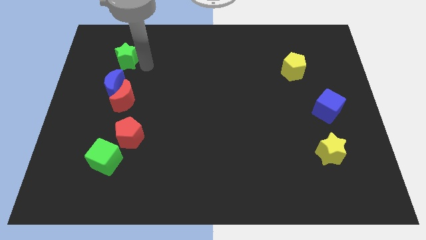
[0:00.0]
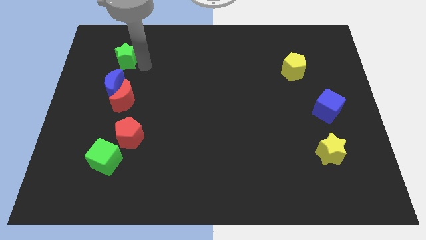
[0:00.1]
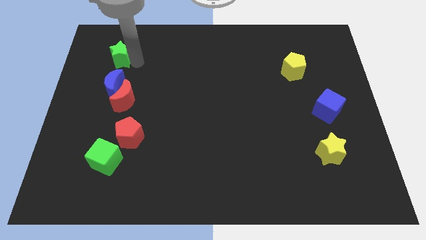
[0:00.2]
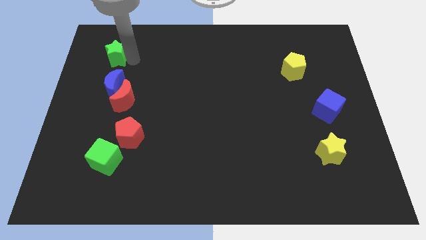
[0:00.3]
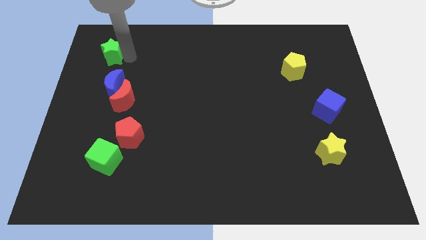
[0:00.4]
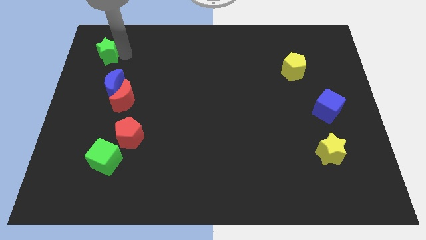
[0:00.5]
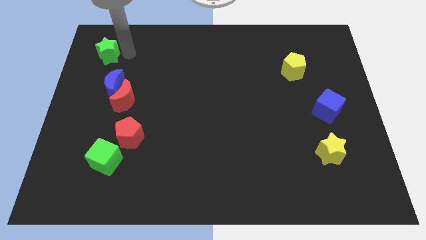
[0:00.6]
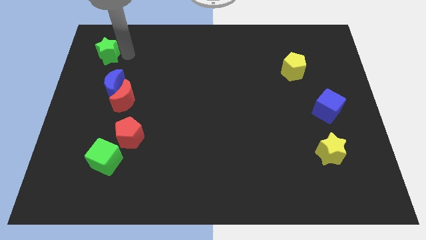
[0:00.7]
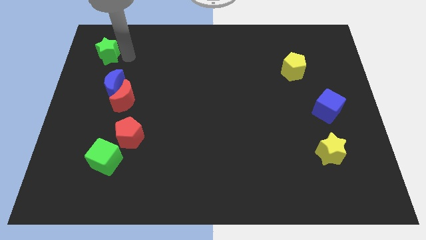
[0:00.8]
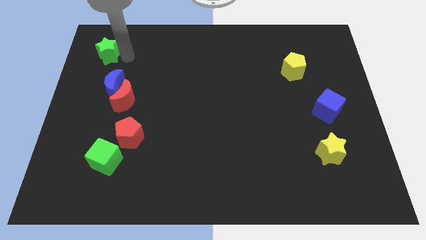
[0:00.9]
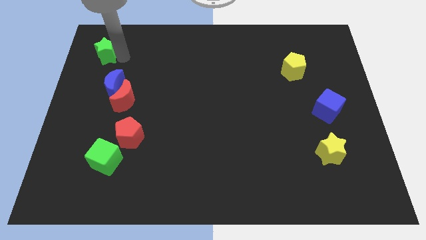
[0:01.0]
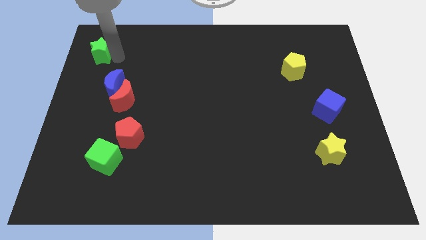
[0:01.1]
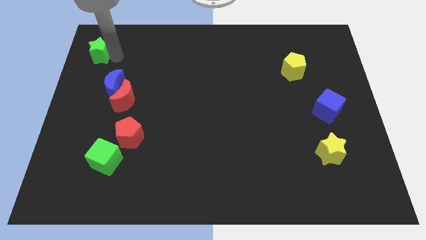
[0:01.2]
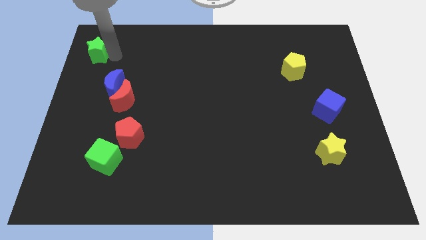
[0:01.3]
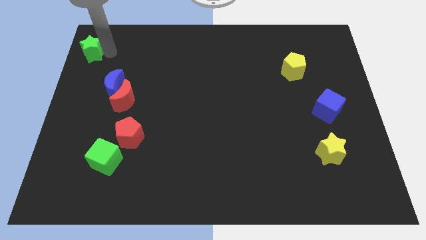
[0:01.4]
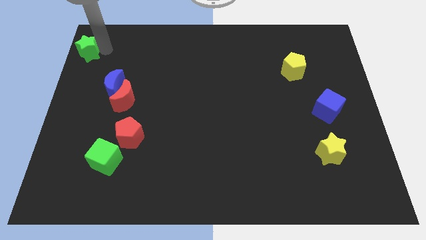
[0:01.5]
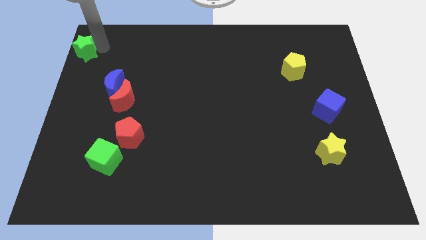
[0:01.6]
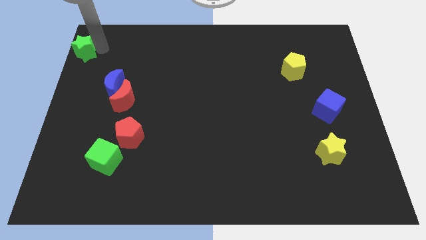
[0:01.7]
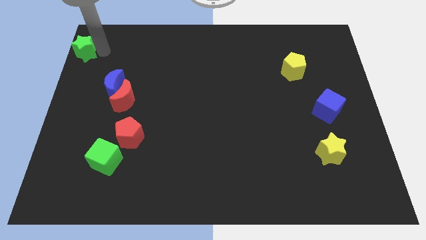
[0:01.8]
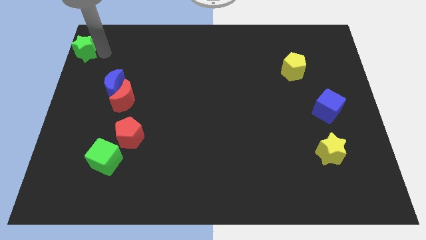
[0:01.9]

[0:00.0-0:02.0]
push the green star to the top left corner

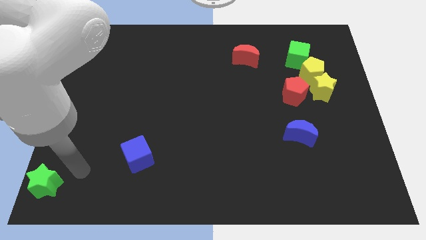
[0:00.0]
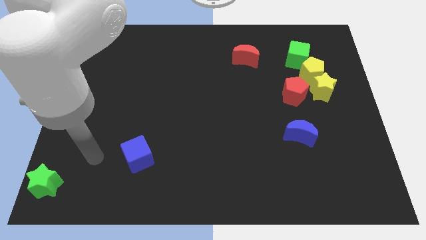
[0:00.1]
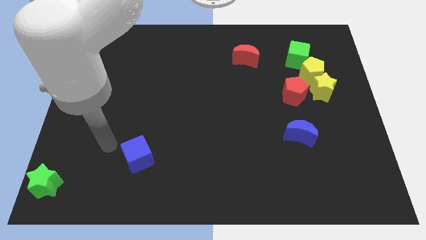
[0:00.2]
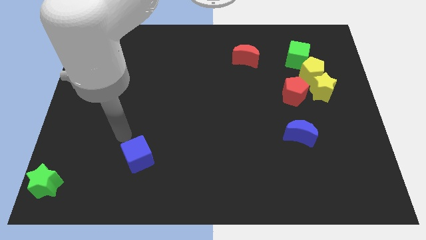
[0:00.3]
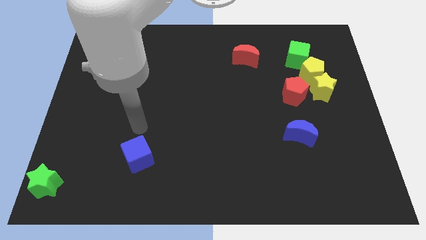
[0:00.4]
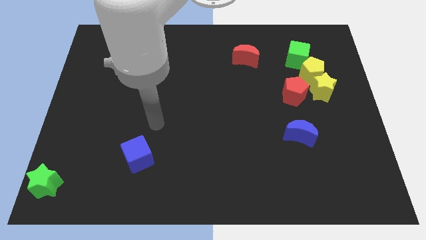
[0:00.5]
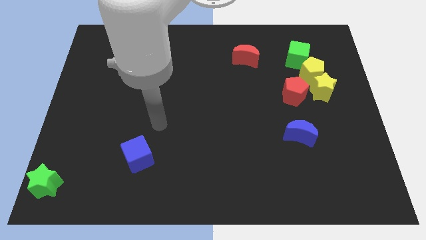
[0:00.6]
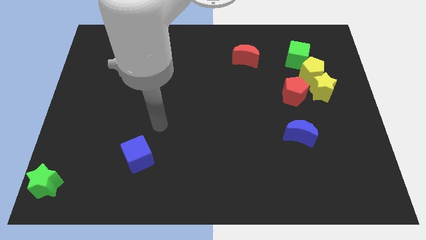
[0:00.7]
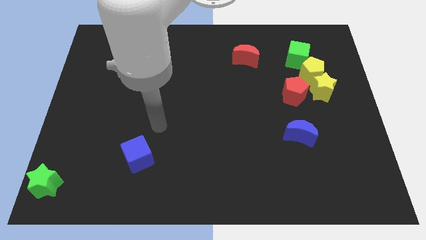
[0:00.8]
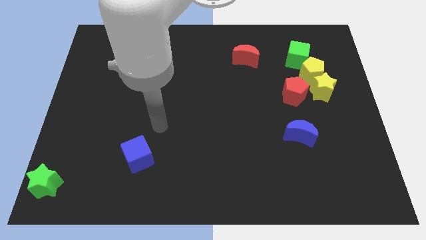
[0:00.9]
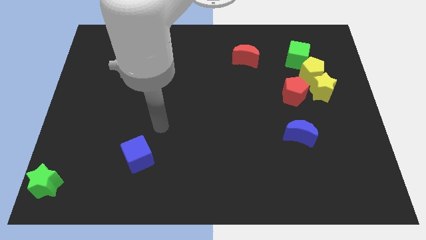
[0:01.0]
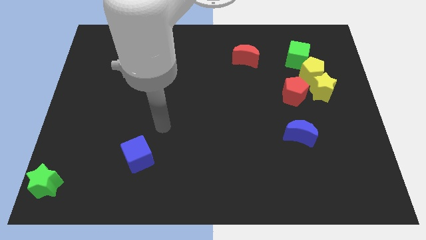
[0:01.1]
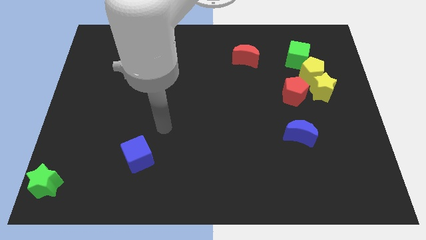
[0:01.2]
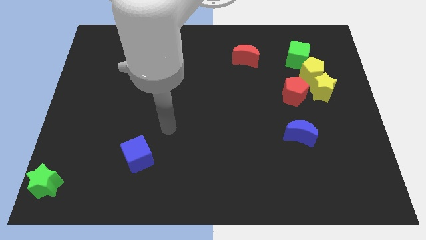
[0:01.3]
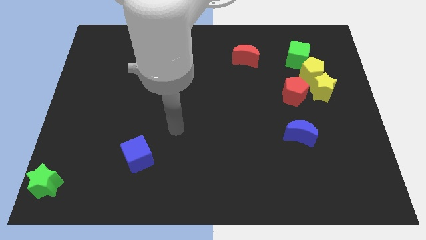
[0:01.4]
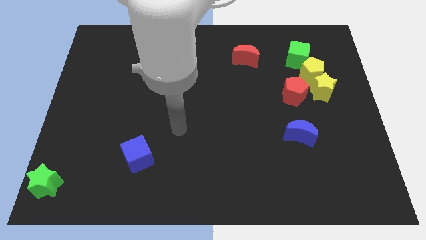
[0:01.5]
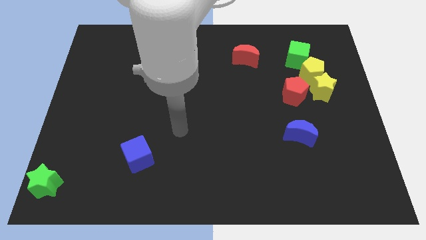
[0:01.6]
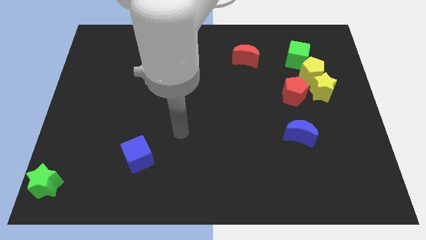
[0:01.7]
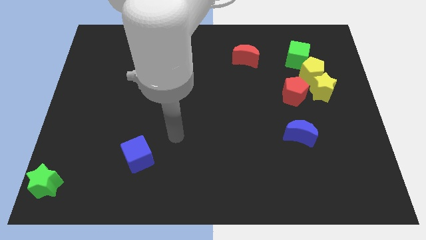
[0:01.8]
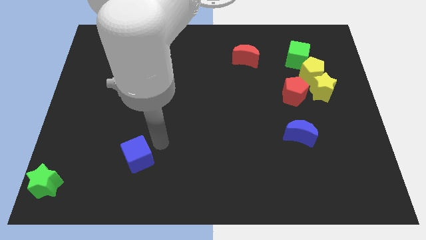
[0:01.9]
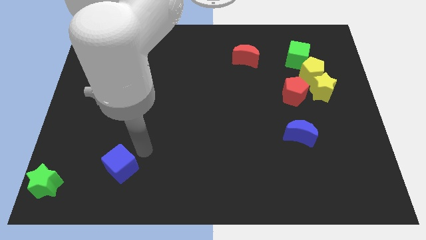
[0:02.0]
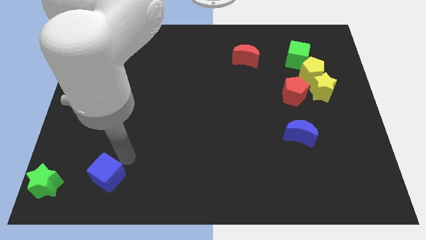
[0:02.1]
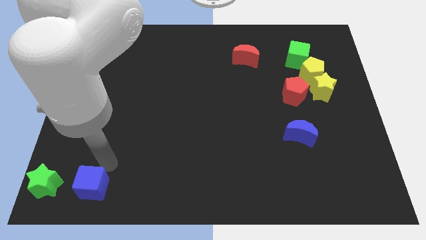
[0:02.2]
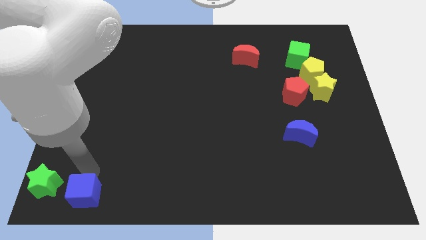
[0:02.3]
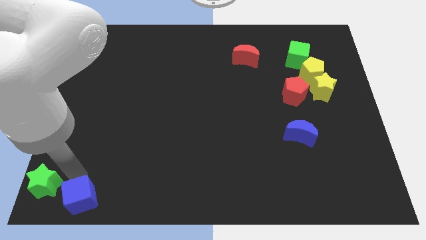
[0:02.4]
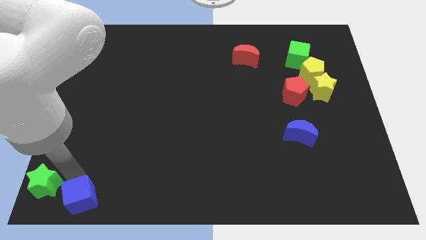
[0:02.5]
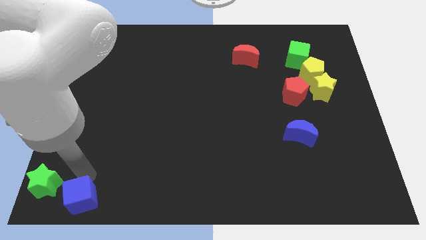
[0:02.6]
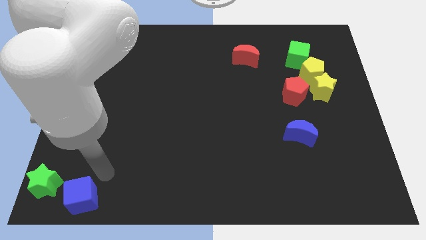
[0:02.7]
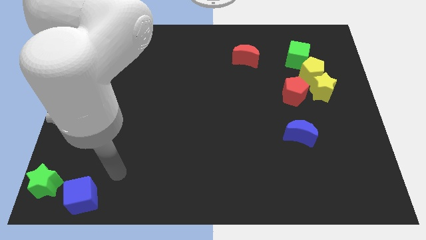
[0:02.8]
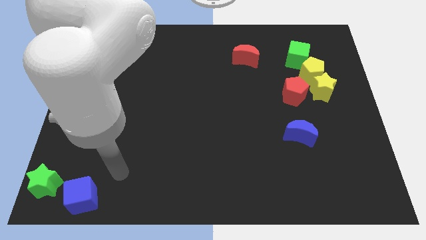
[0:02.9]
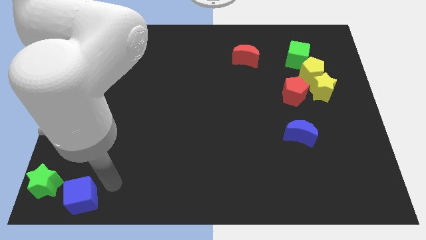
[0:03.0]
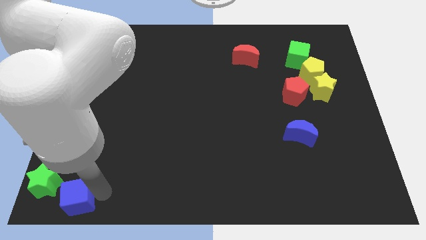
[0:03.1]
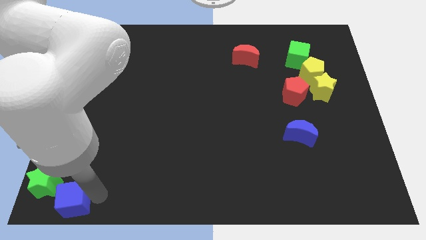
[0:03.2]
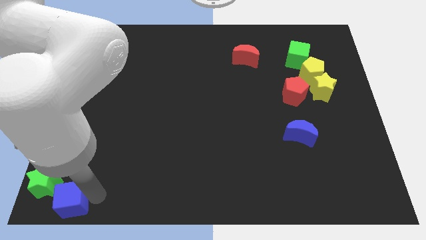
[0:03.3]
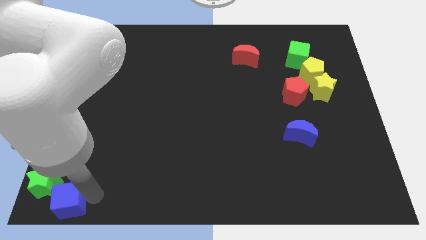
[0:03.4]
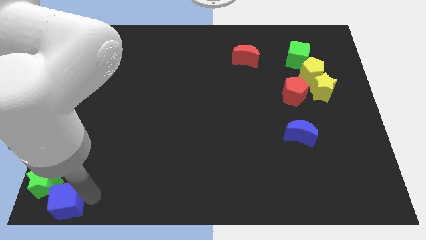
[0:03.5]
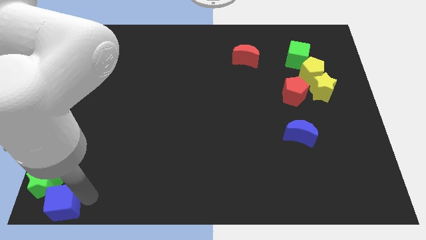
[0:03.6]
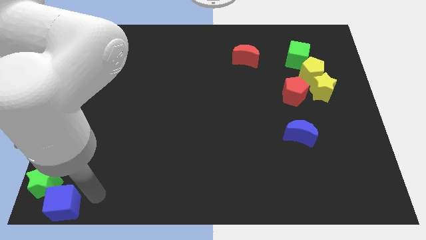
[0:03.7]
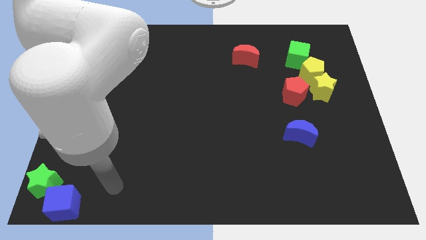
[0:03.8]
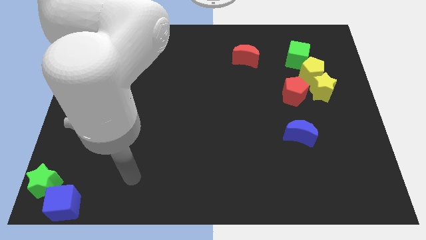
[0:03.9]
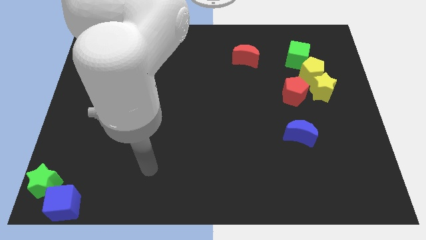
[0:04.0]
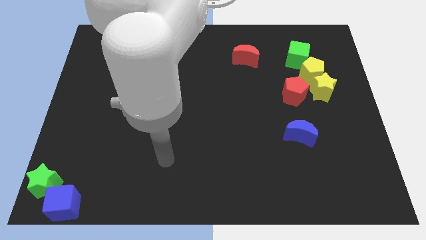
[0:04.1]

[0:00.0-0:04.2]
move the blue cube close to the green star

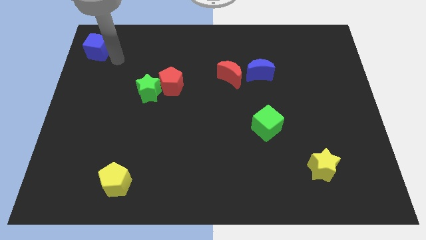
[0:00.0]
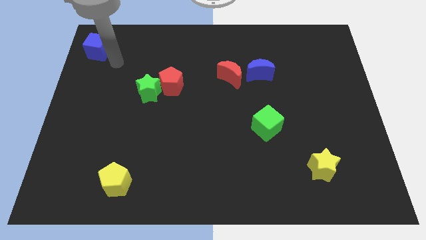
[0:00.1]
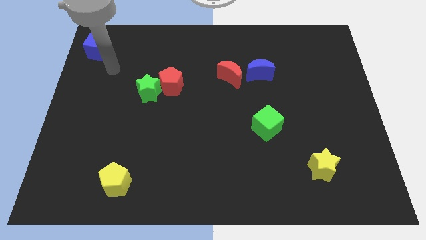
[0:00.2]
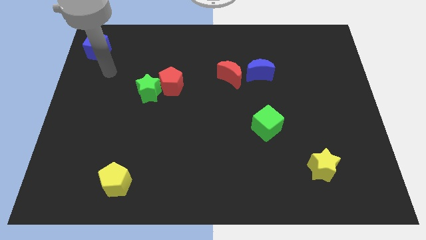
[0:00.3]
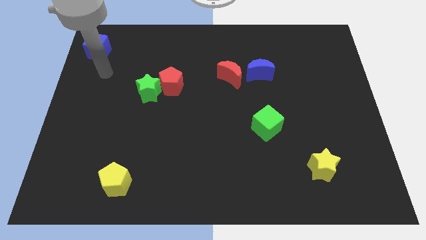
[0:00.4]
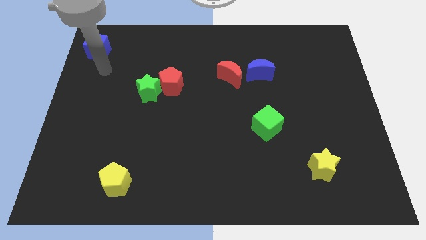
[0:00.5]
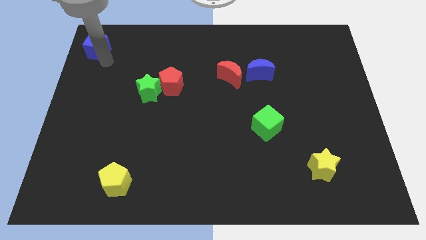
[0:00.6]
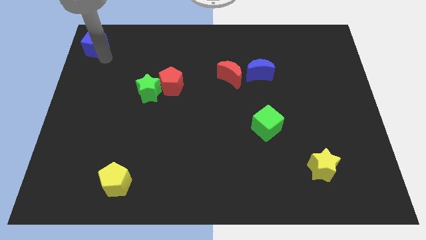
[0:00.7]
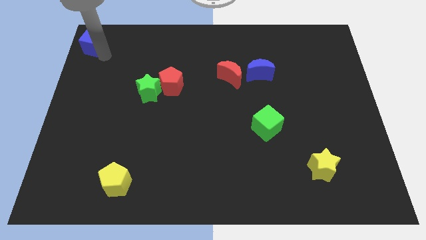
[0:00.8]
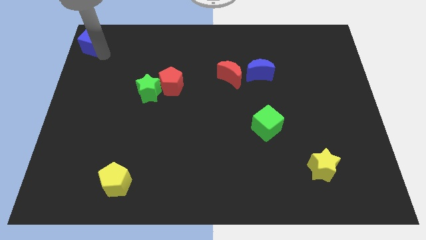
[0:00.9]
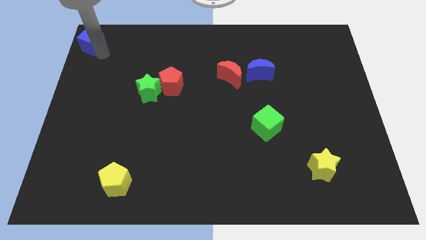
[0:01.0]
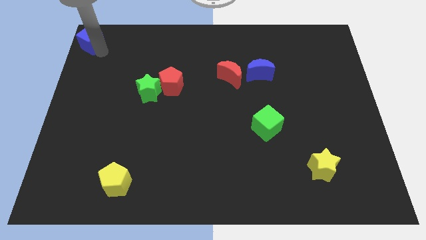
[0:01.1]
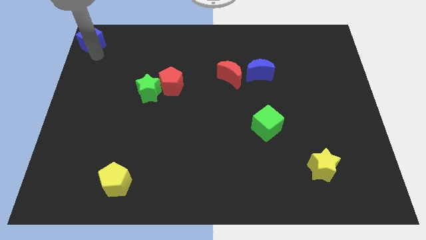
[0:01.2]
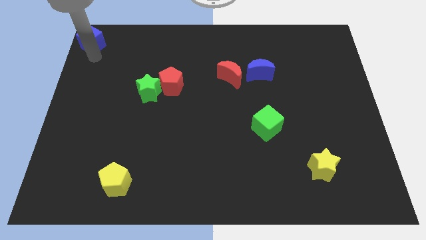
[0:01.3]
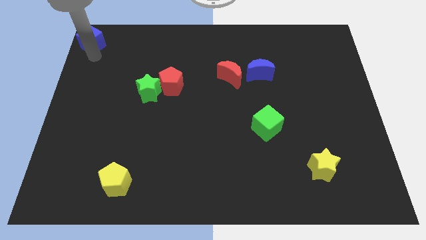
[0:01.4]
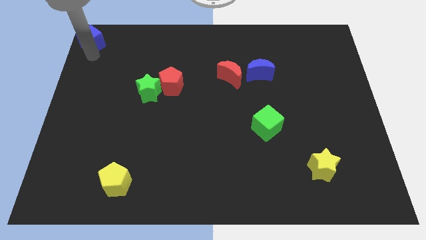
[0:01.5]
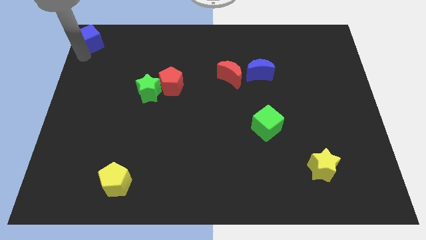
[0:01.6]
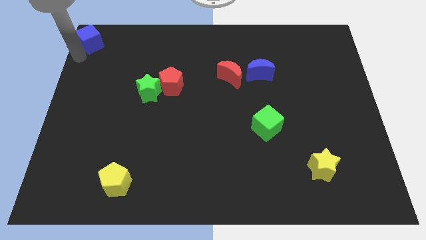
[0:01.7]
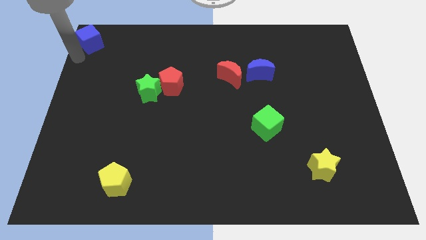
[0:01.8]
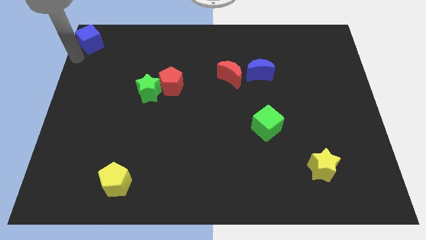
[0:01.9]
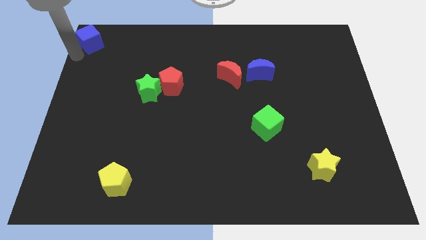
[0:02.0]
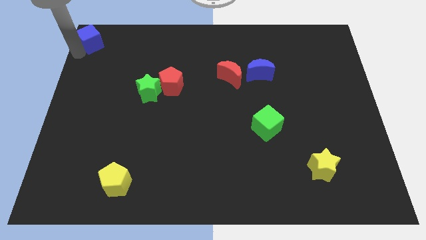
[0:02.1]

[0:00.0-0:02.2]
move the blue cube to the top right corner

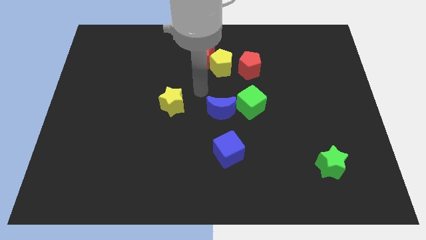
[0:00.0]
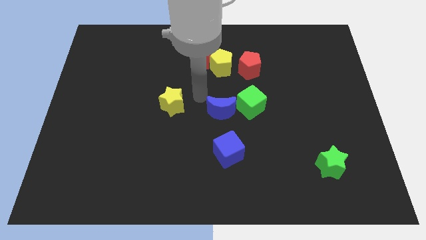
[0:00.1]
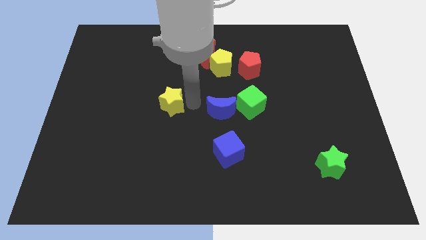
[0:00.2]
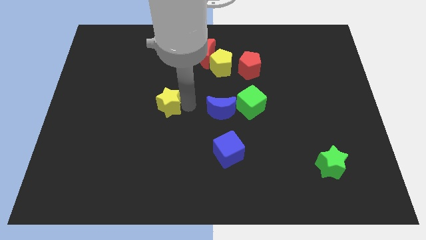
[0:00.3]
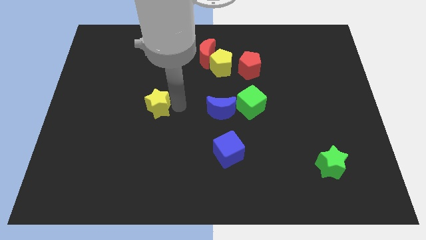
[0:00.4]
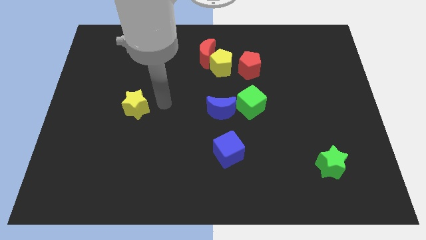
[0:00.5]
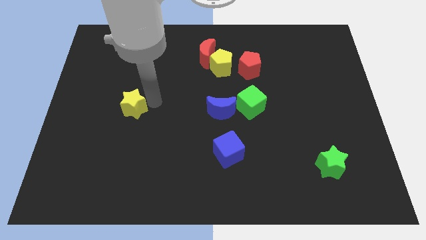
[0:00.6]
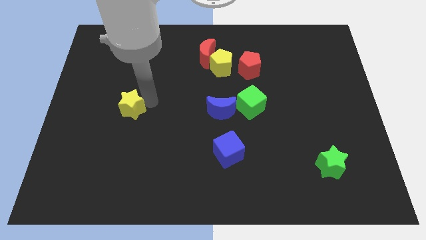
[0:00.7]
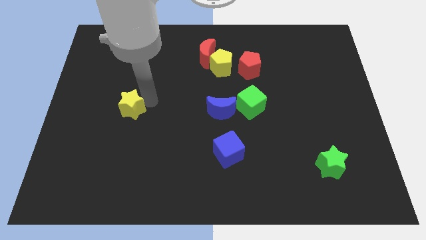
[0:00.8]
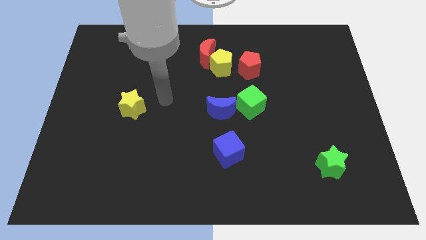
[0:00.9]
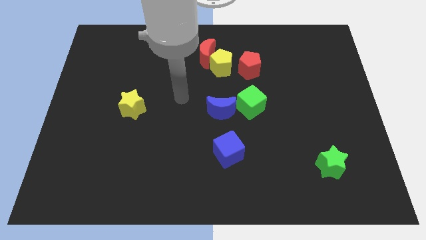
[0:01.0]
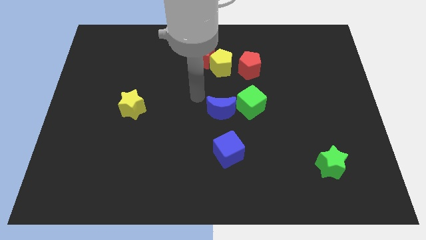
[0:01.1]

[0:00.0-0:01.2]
move the yellow star slightly to the left
